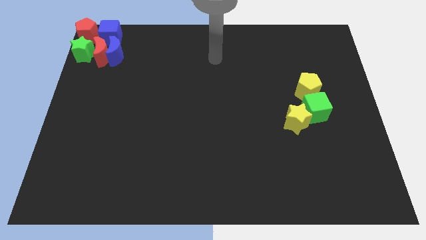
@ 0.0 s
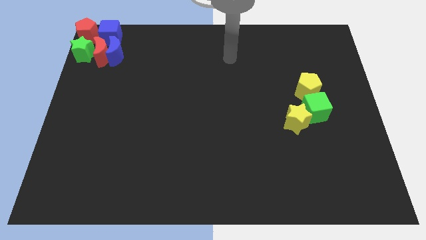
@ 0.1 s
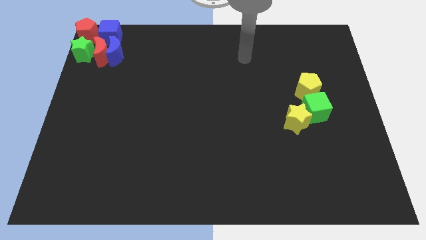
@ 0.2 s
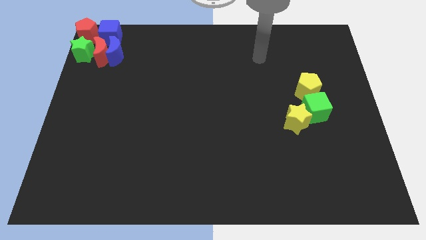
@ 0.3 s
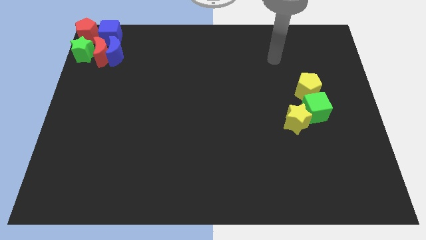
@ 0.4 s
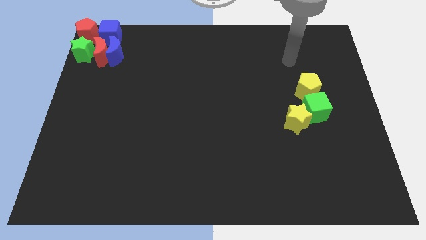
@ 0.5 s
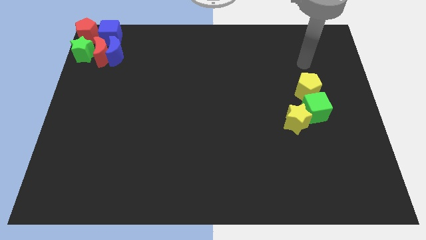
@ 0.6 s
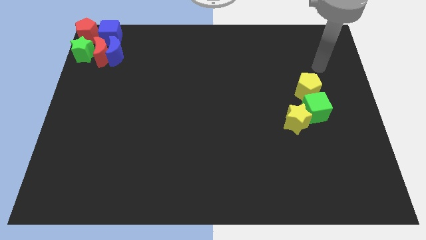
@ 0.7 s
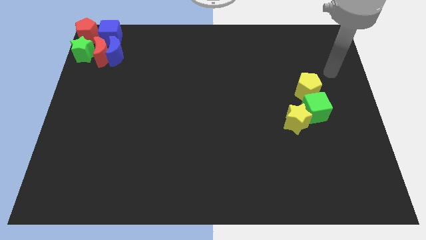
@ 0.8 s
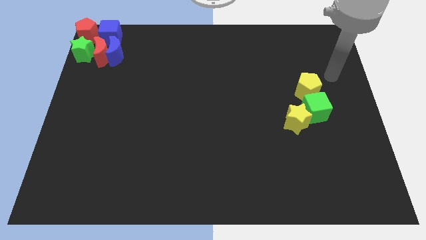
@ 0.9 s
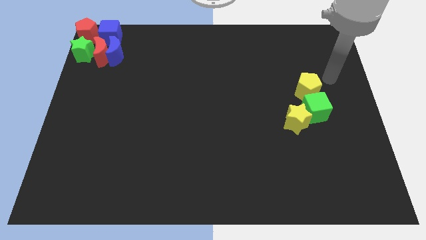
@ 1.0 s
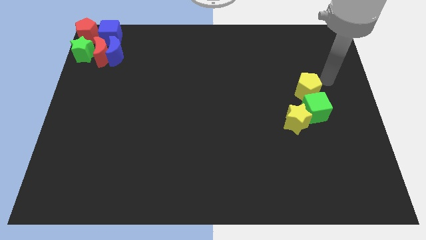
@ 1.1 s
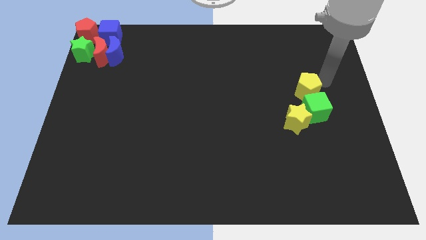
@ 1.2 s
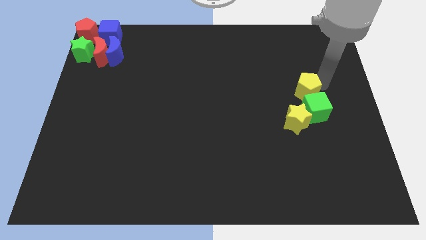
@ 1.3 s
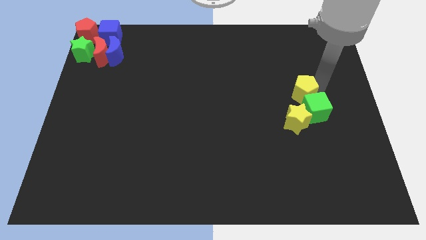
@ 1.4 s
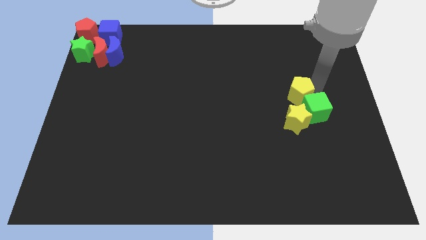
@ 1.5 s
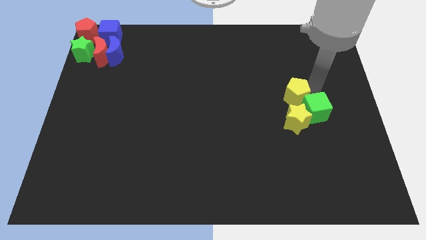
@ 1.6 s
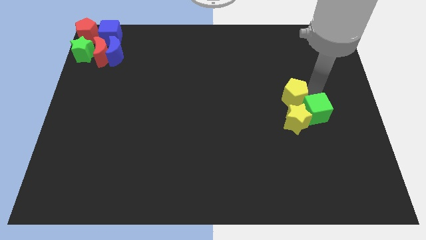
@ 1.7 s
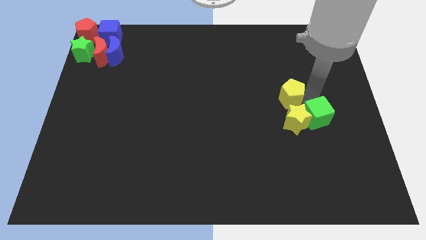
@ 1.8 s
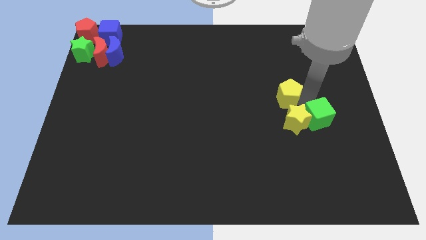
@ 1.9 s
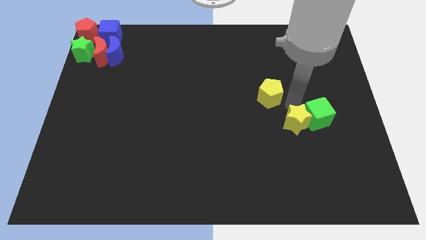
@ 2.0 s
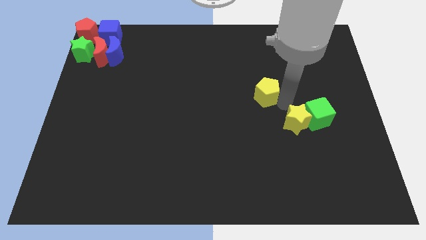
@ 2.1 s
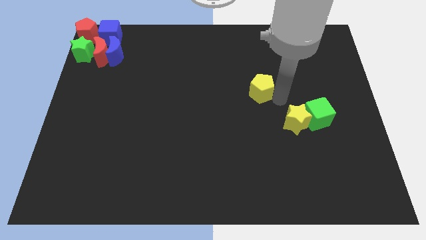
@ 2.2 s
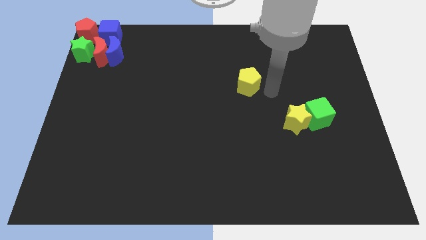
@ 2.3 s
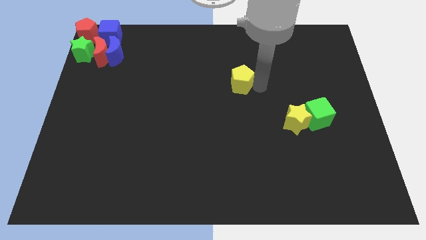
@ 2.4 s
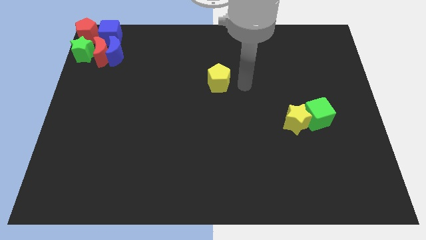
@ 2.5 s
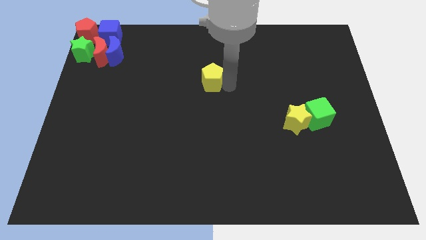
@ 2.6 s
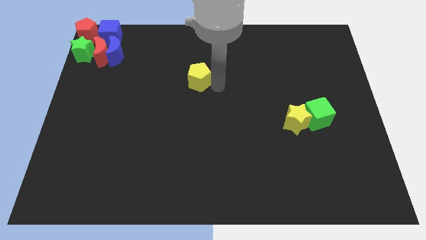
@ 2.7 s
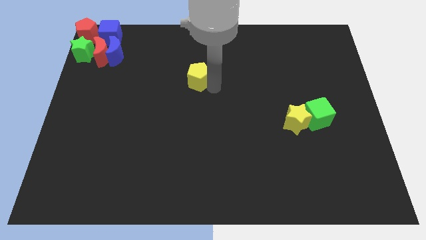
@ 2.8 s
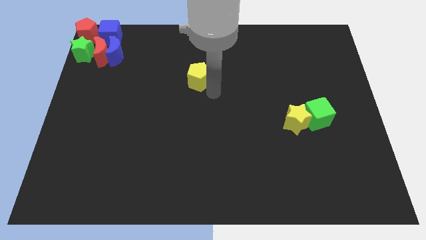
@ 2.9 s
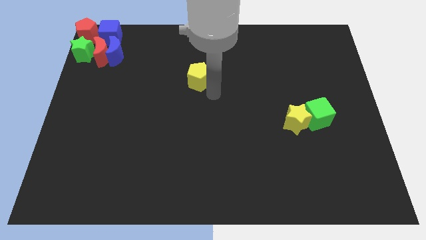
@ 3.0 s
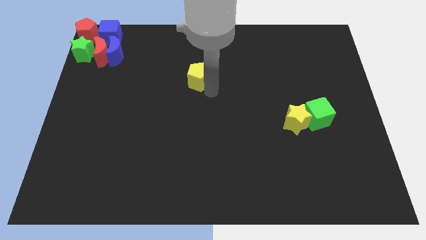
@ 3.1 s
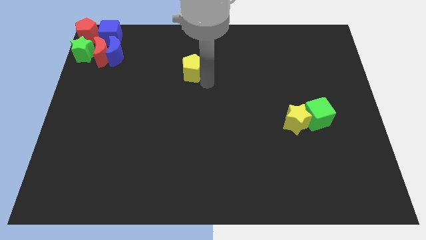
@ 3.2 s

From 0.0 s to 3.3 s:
separate yellow pentagon from group of blocks

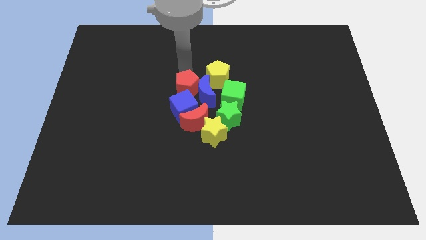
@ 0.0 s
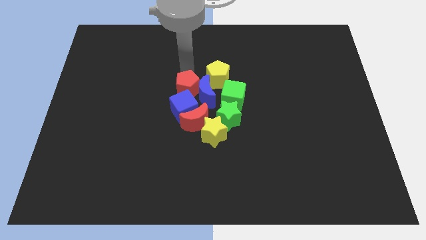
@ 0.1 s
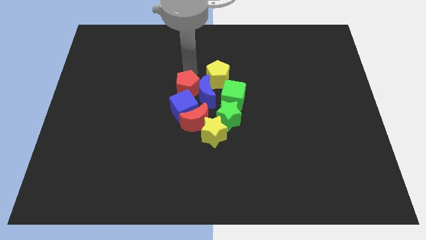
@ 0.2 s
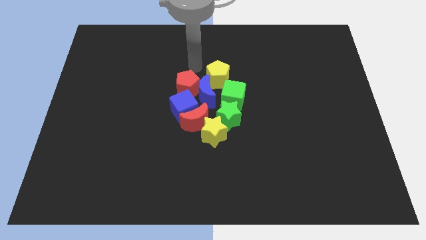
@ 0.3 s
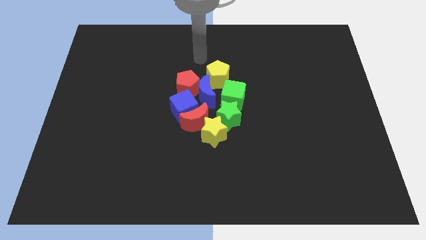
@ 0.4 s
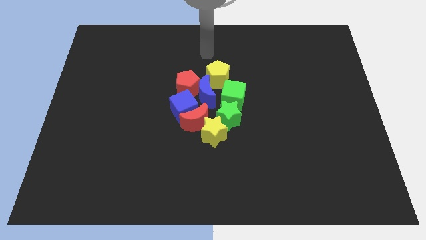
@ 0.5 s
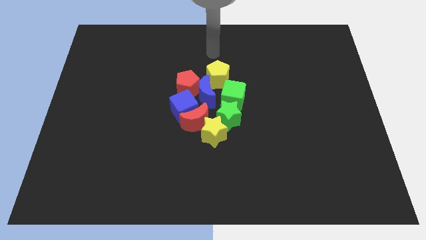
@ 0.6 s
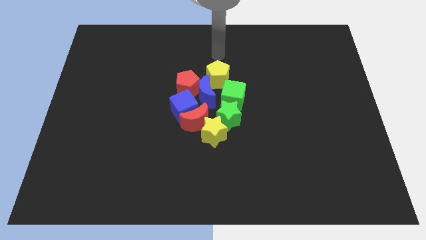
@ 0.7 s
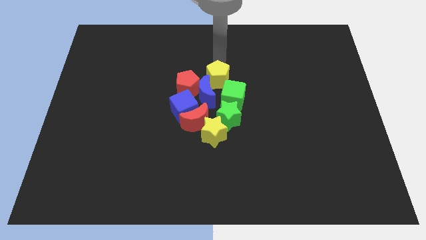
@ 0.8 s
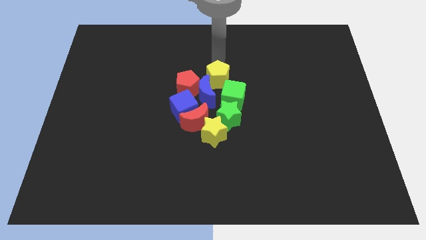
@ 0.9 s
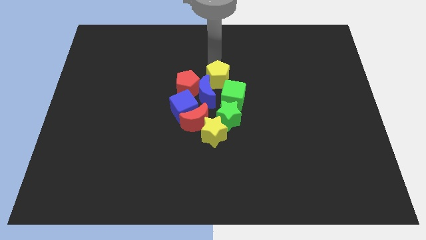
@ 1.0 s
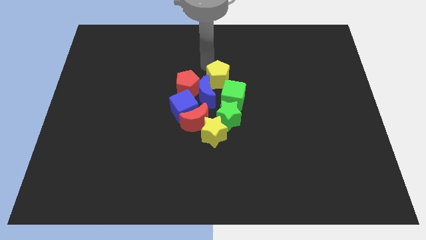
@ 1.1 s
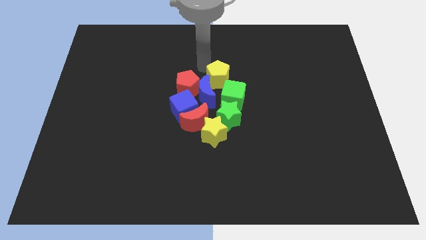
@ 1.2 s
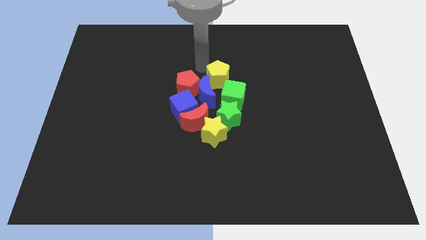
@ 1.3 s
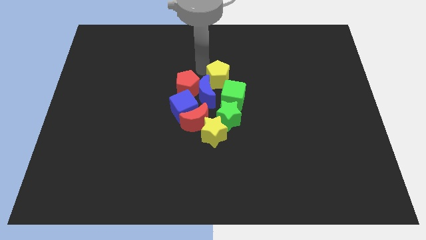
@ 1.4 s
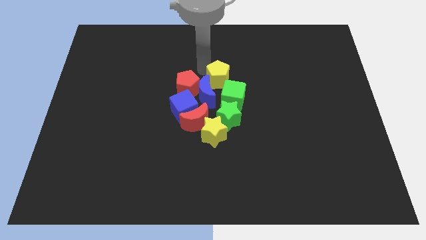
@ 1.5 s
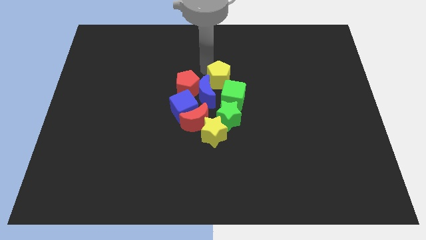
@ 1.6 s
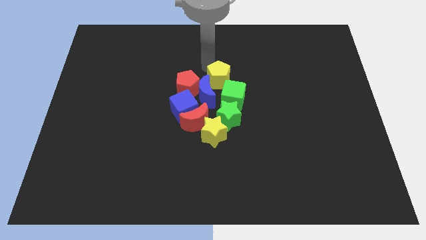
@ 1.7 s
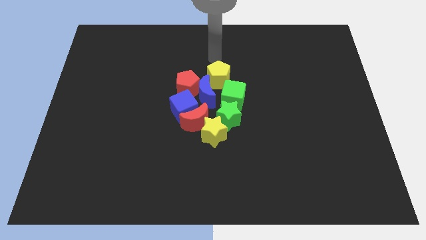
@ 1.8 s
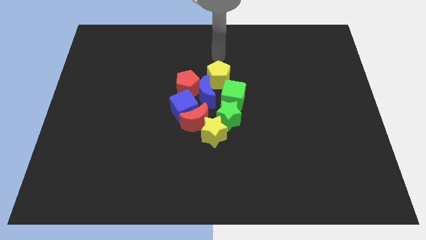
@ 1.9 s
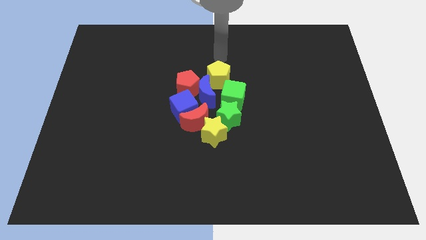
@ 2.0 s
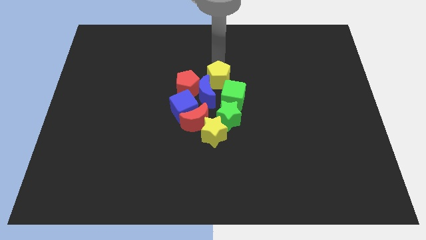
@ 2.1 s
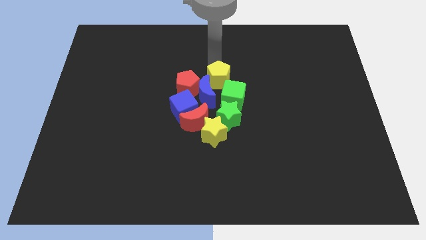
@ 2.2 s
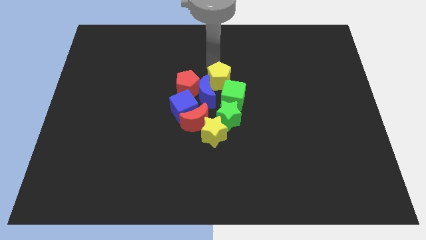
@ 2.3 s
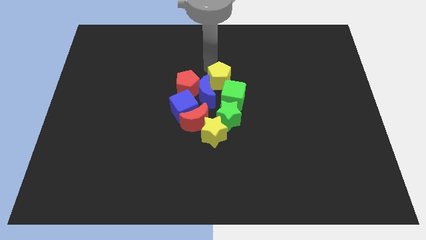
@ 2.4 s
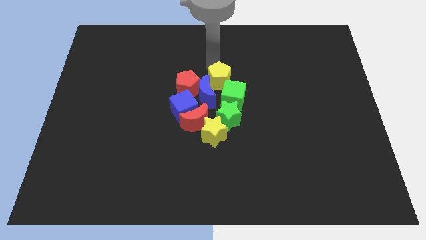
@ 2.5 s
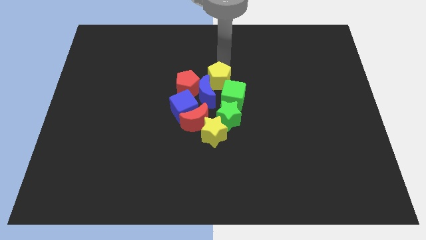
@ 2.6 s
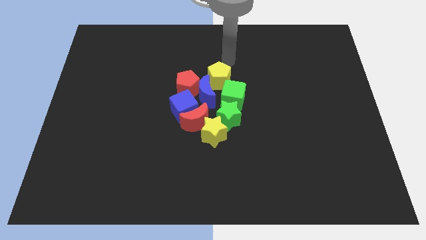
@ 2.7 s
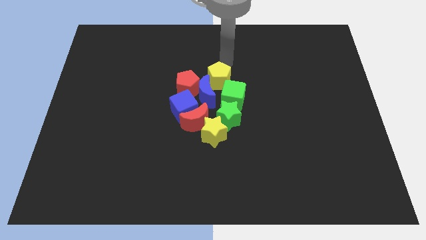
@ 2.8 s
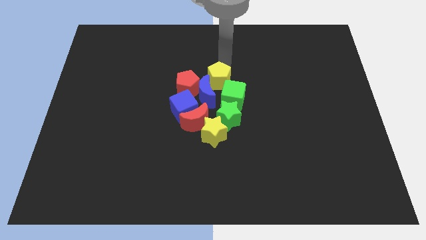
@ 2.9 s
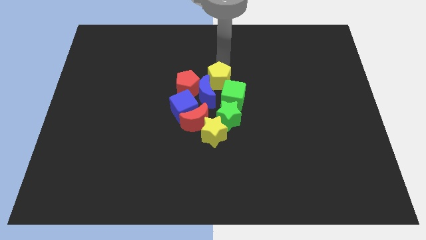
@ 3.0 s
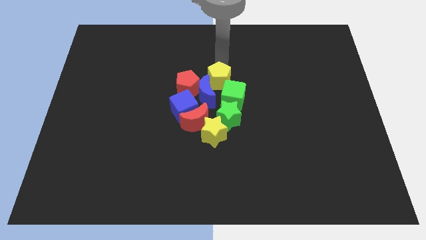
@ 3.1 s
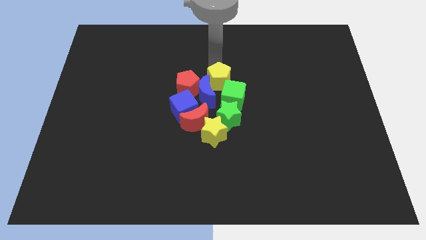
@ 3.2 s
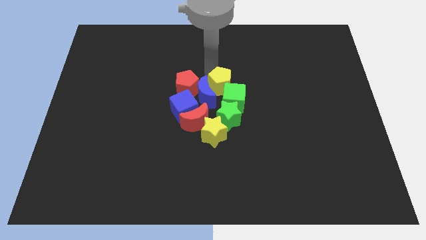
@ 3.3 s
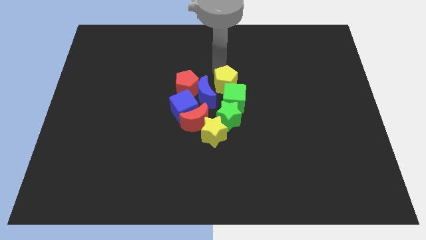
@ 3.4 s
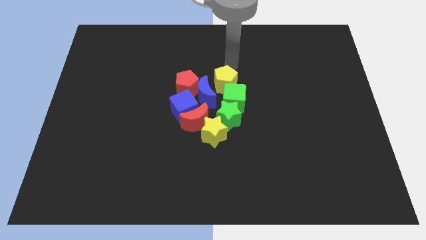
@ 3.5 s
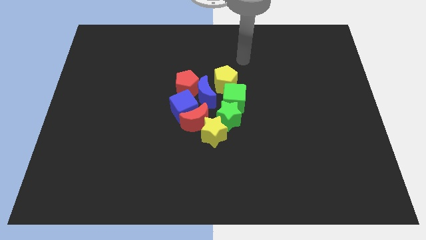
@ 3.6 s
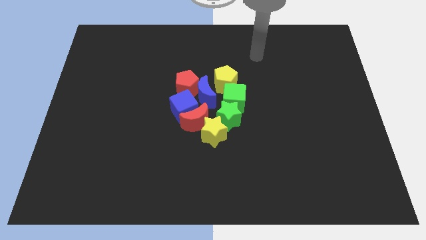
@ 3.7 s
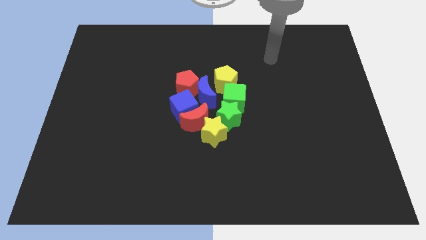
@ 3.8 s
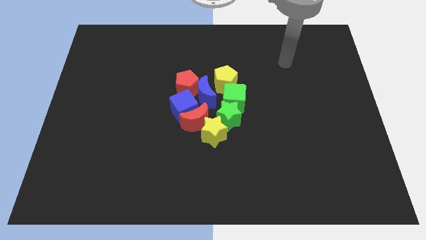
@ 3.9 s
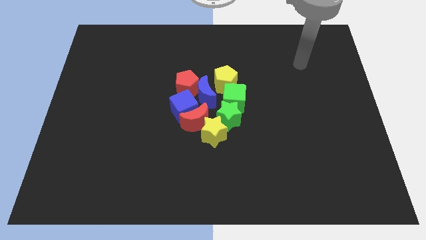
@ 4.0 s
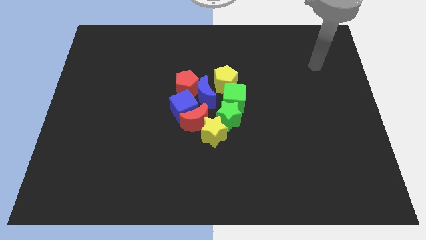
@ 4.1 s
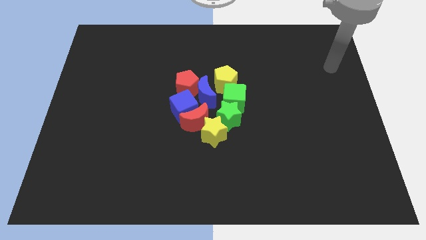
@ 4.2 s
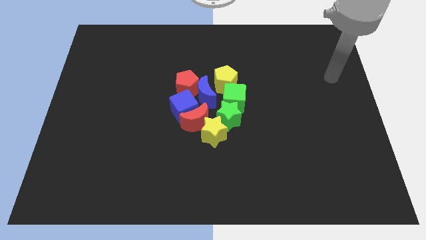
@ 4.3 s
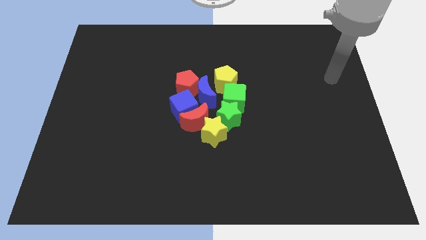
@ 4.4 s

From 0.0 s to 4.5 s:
push the yellow pentagon into the group of blocks

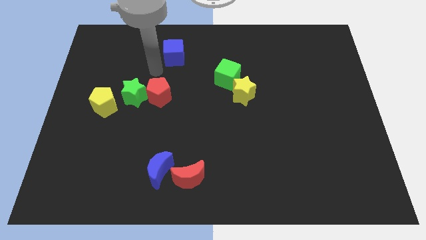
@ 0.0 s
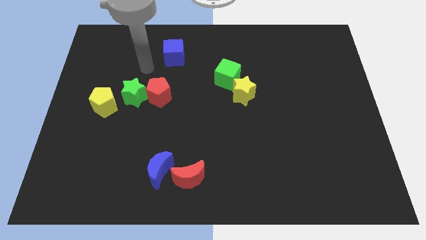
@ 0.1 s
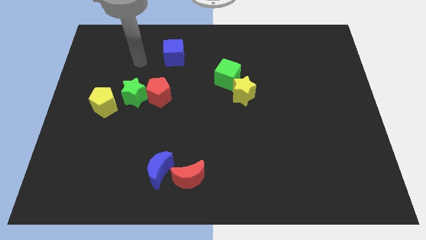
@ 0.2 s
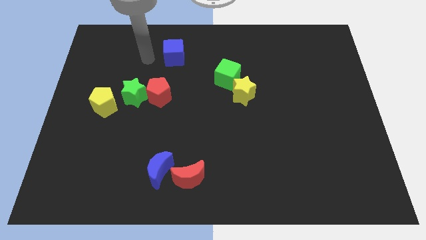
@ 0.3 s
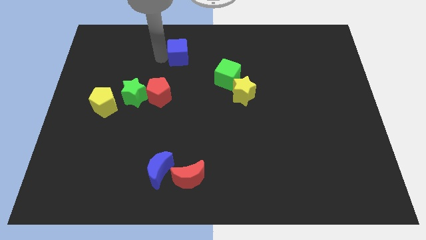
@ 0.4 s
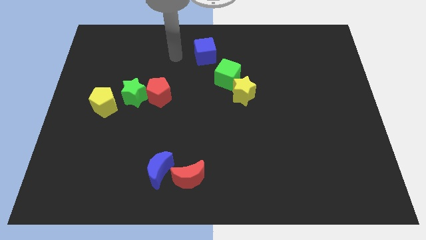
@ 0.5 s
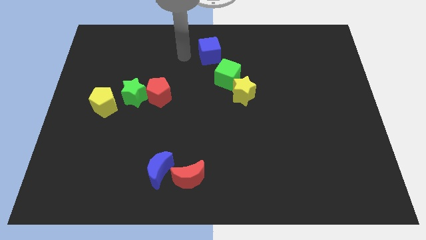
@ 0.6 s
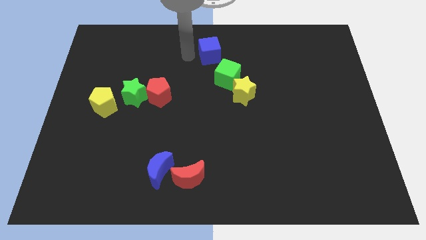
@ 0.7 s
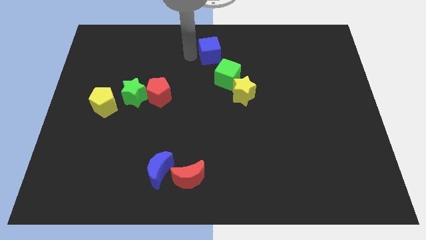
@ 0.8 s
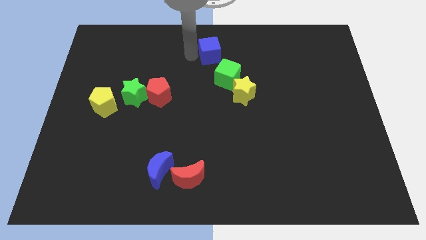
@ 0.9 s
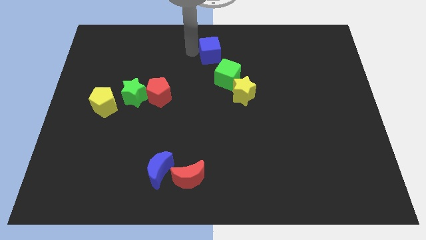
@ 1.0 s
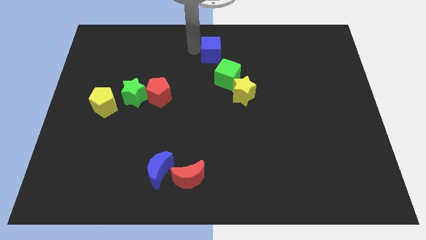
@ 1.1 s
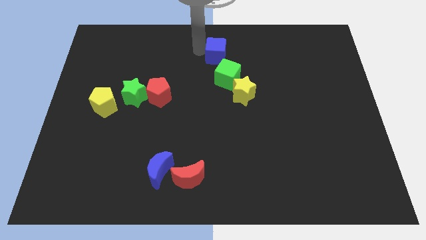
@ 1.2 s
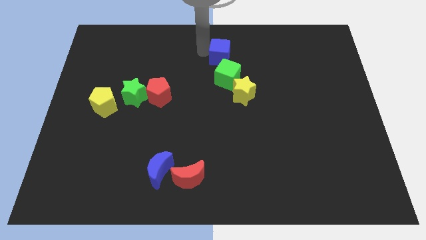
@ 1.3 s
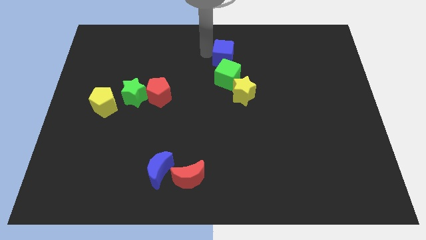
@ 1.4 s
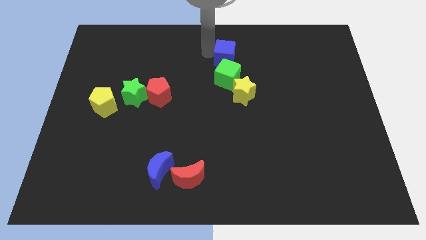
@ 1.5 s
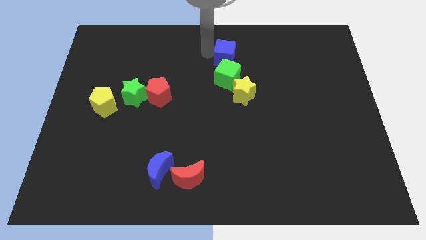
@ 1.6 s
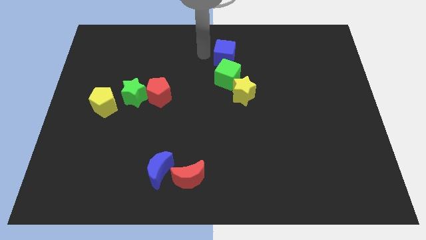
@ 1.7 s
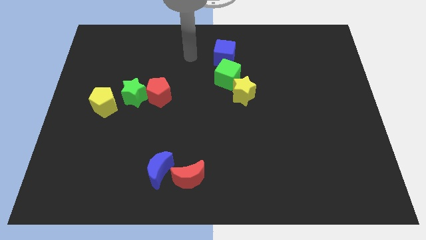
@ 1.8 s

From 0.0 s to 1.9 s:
move the blue cube to the top side of the green cube
